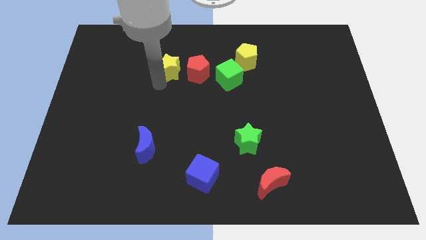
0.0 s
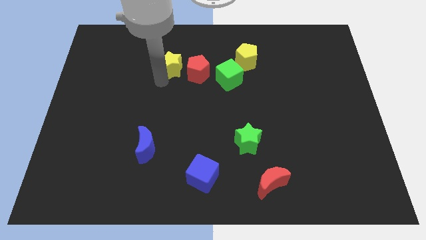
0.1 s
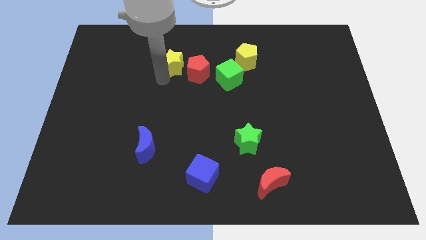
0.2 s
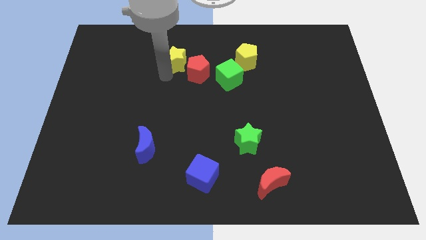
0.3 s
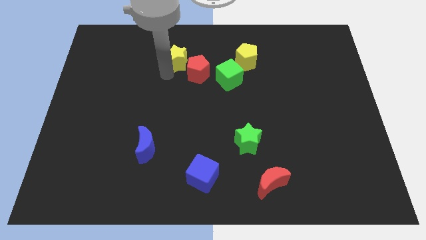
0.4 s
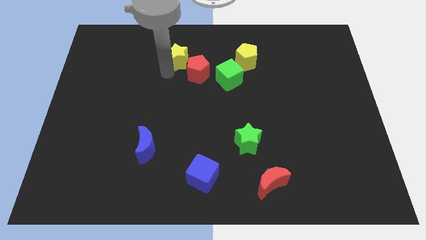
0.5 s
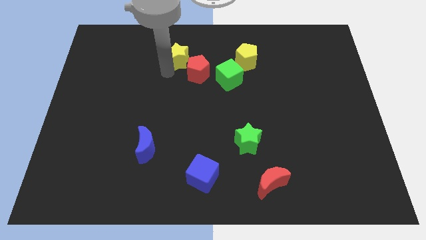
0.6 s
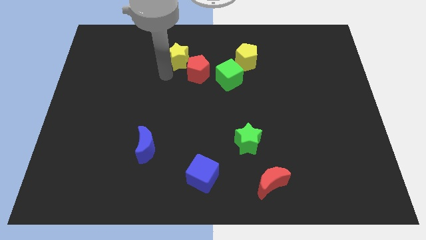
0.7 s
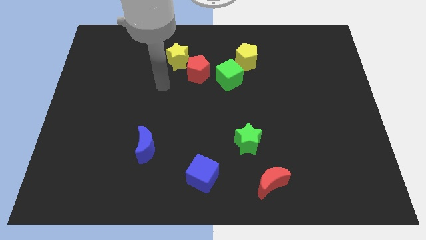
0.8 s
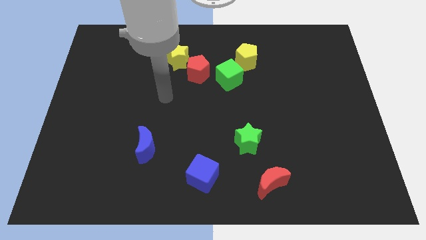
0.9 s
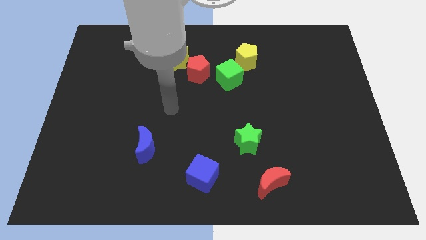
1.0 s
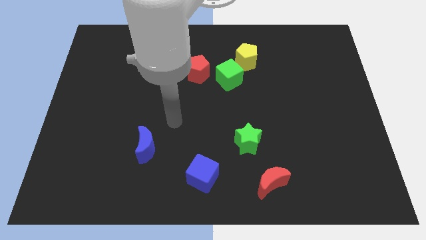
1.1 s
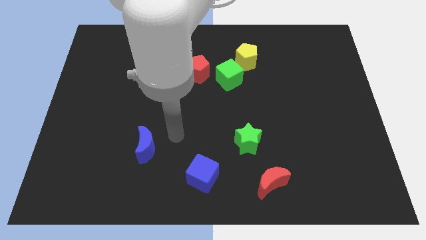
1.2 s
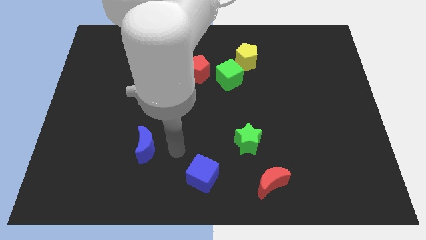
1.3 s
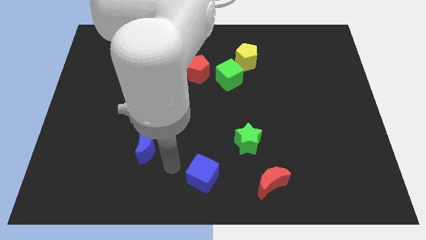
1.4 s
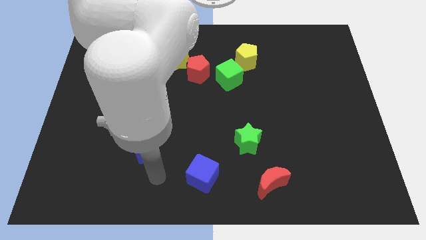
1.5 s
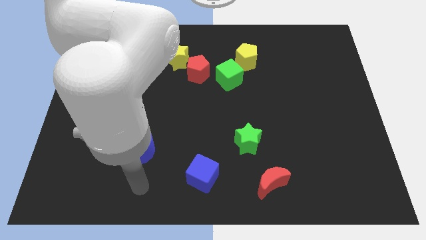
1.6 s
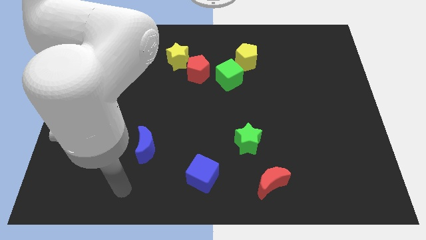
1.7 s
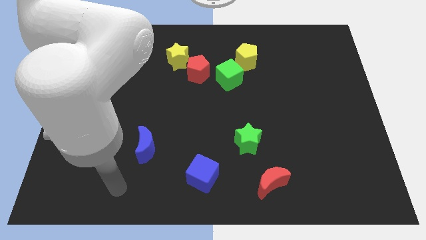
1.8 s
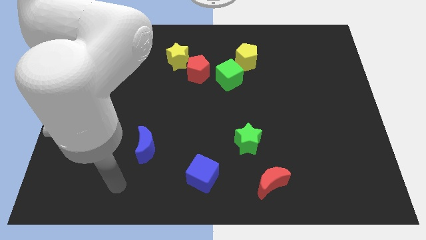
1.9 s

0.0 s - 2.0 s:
move your arm towards the blue moon

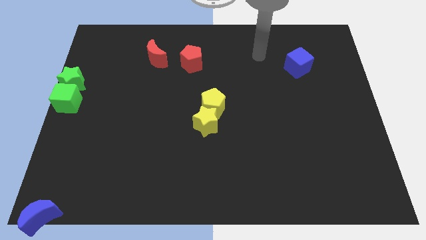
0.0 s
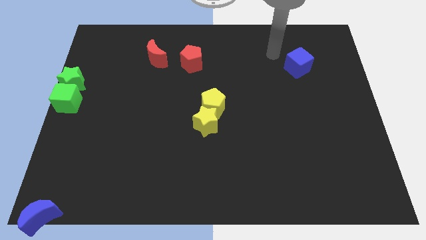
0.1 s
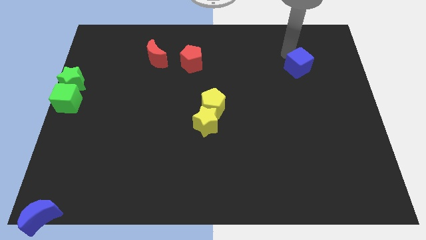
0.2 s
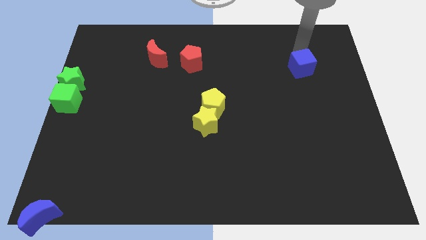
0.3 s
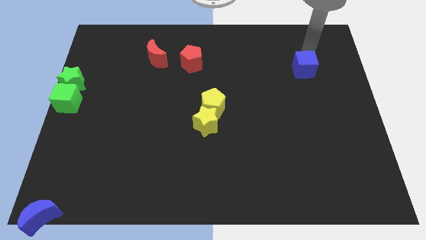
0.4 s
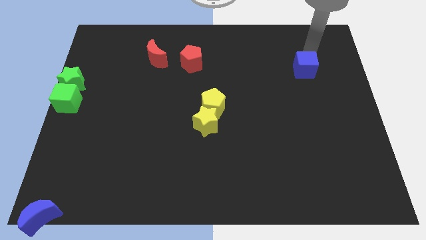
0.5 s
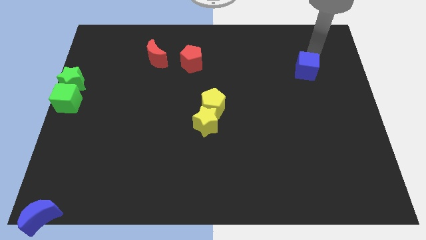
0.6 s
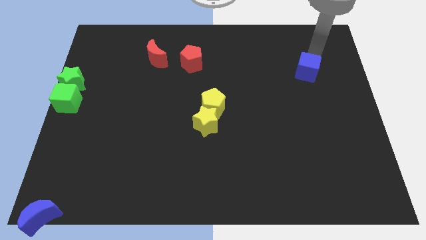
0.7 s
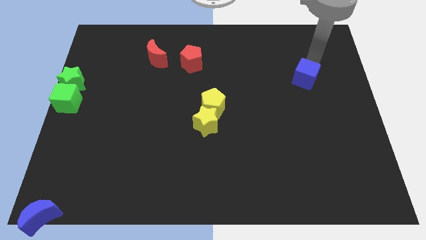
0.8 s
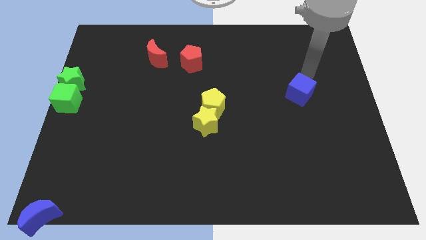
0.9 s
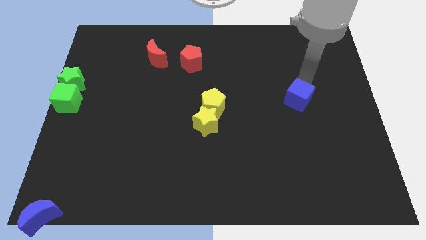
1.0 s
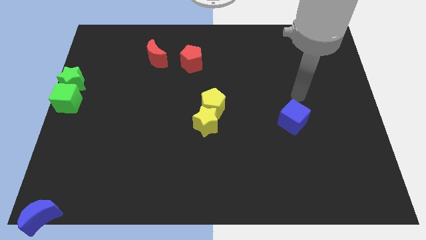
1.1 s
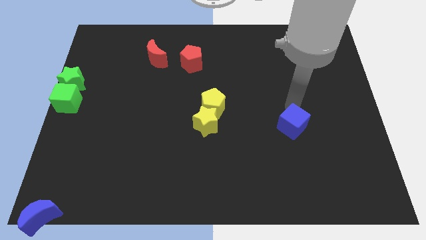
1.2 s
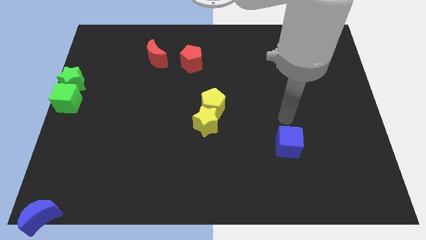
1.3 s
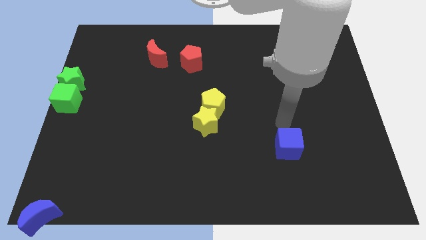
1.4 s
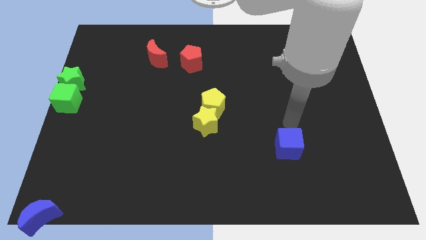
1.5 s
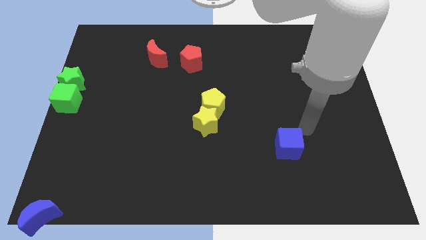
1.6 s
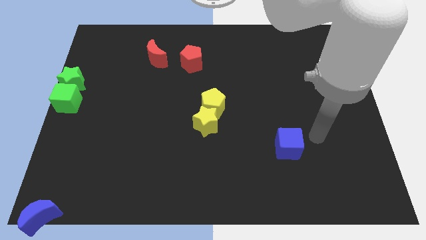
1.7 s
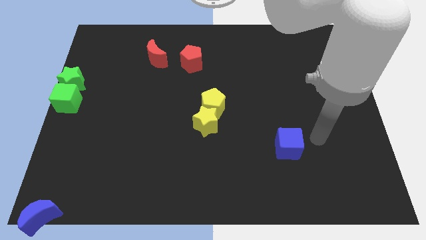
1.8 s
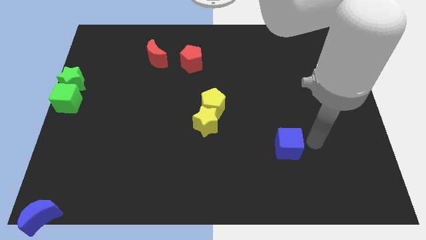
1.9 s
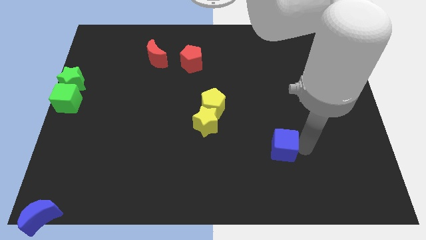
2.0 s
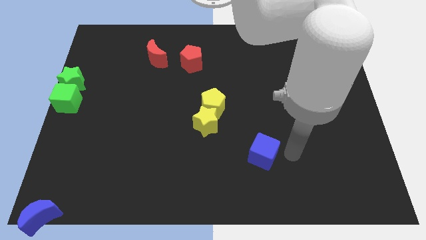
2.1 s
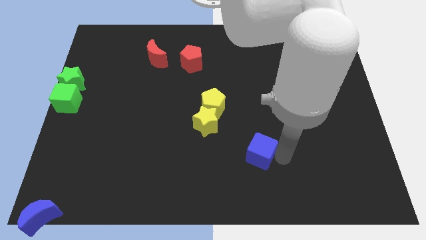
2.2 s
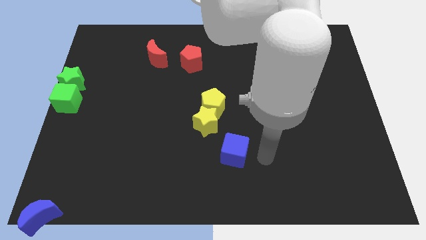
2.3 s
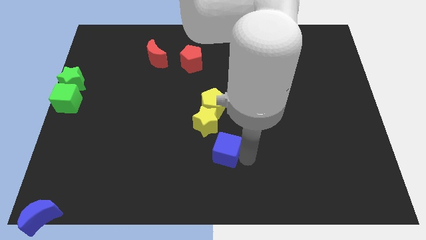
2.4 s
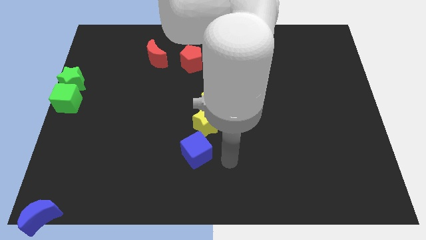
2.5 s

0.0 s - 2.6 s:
slide blue cube to the bottom side of the yellow star

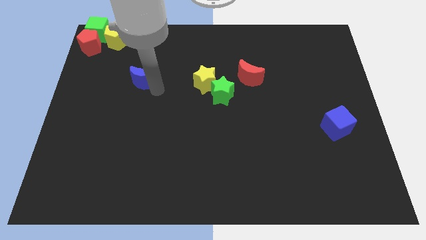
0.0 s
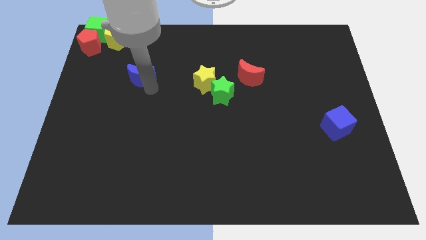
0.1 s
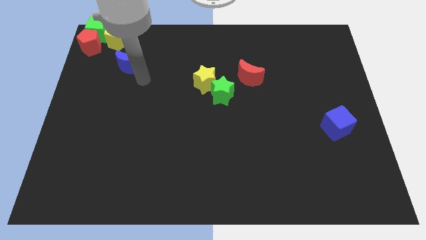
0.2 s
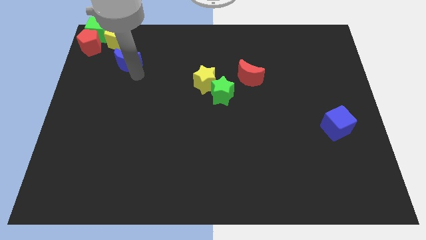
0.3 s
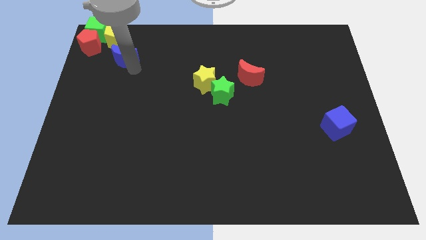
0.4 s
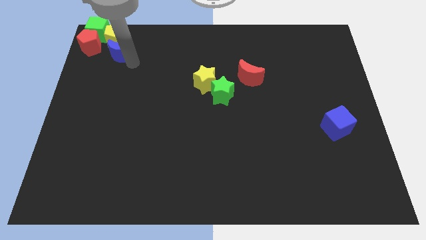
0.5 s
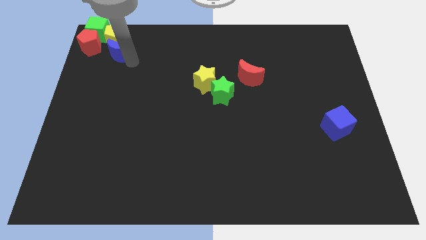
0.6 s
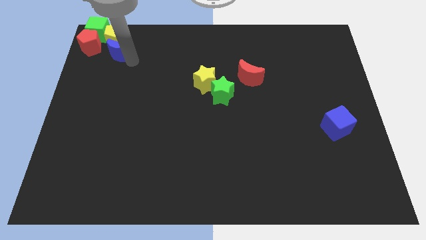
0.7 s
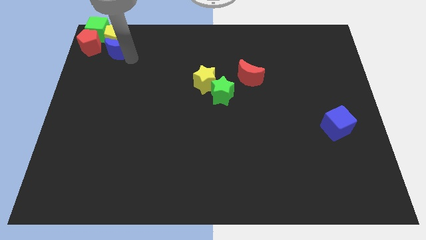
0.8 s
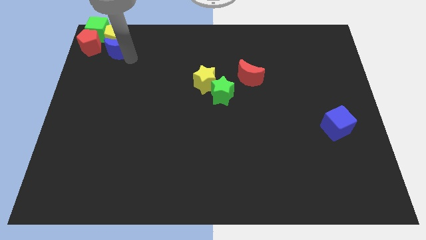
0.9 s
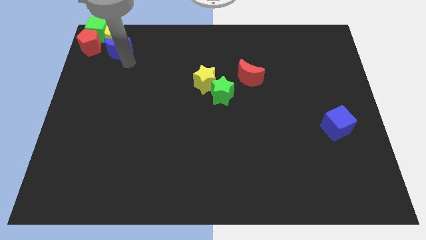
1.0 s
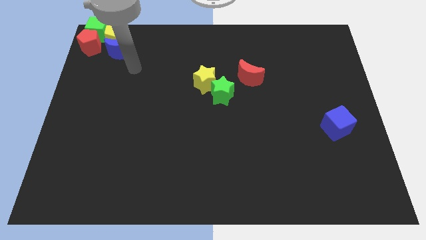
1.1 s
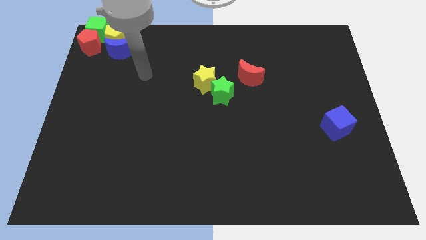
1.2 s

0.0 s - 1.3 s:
move the blue crescent to the bottom of the yellow star

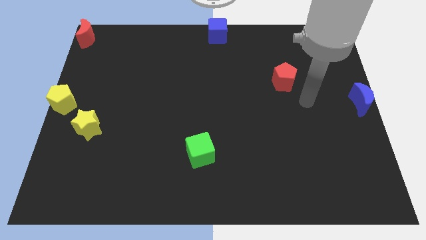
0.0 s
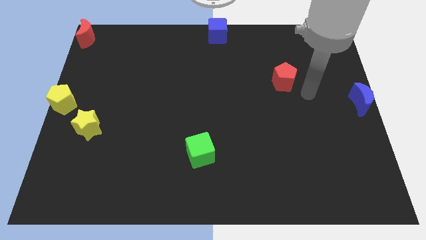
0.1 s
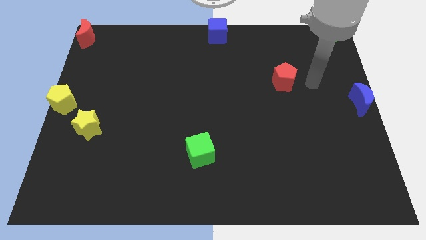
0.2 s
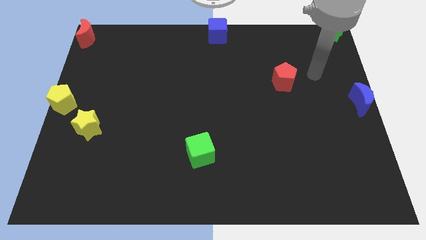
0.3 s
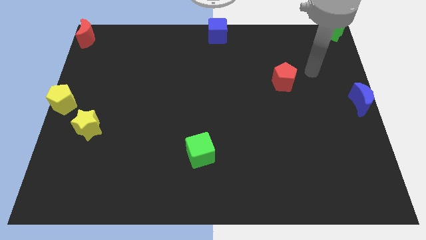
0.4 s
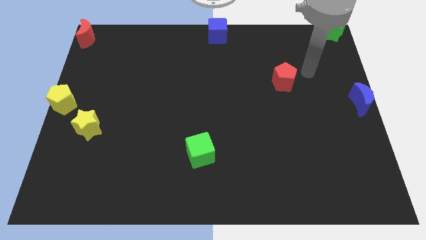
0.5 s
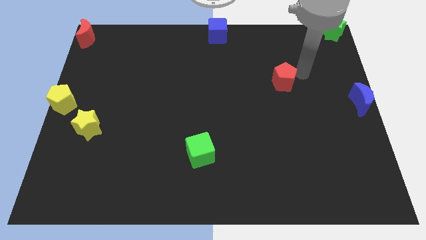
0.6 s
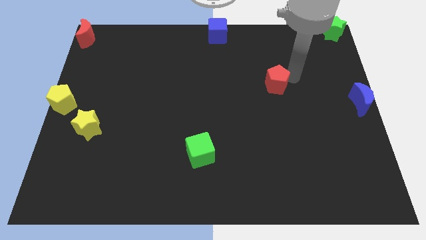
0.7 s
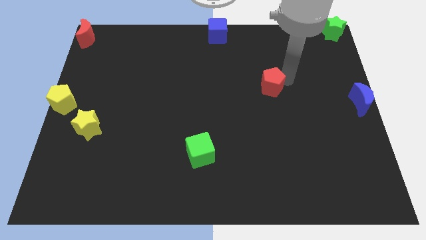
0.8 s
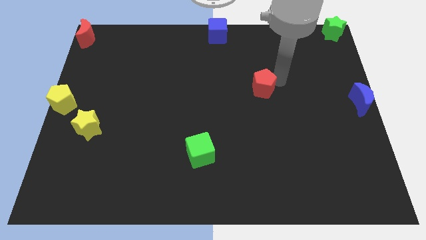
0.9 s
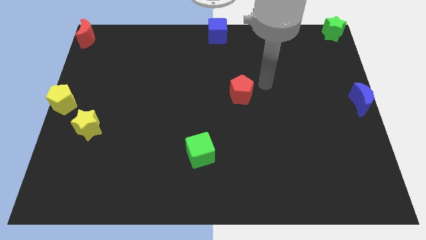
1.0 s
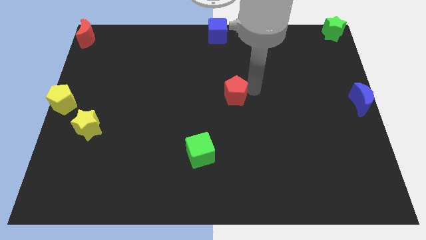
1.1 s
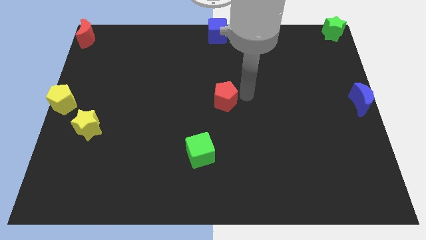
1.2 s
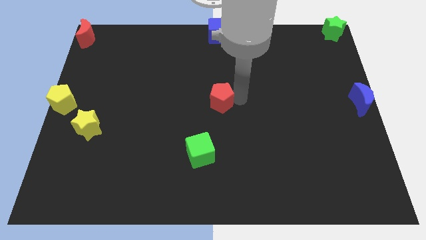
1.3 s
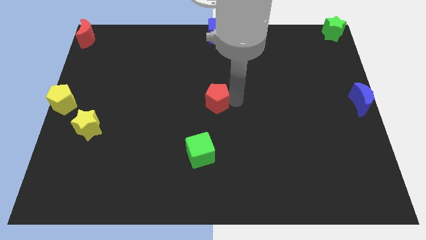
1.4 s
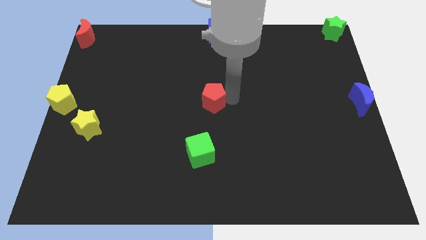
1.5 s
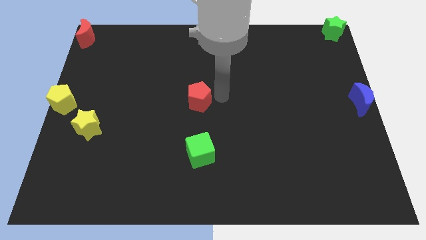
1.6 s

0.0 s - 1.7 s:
move the red pentagon to the center of the board

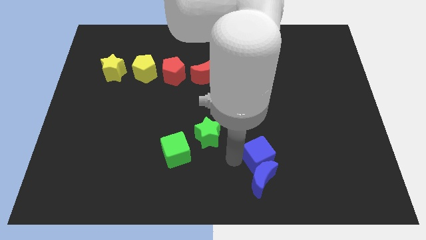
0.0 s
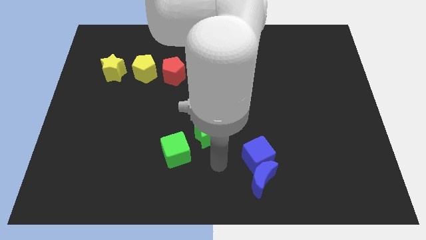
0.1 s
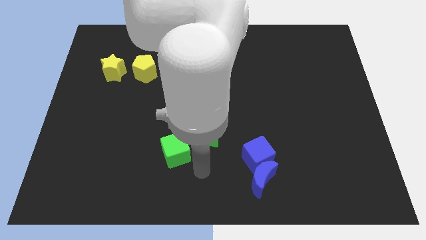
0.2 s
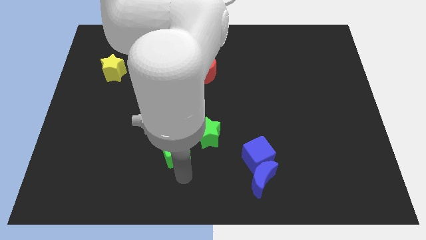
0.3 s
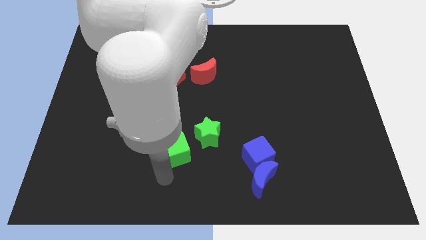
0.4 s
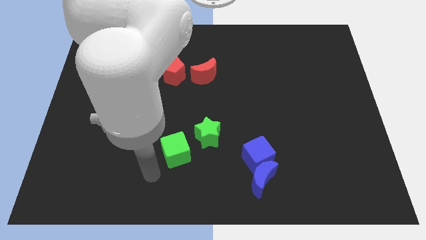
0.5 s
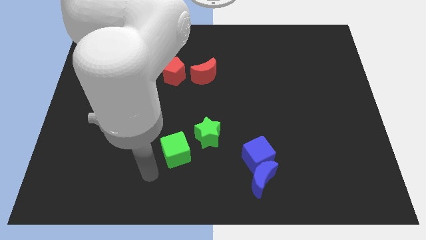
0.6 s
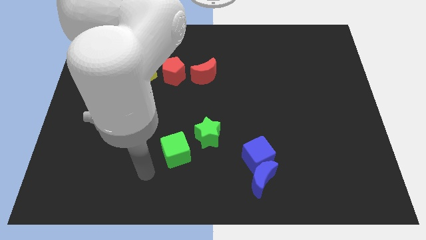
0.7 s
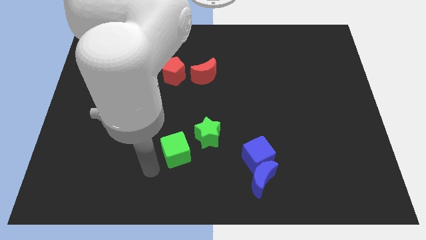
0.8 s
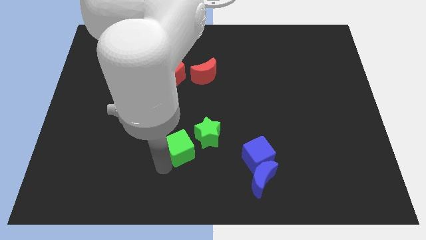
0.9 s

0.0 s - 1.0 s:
move your arm away from the blue cube

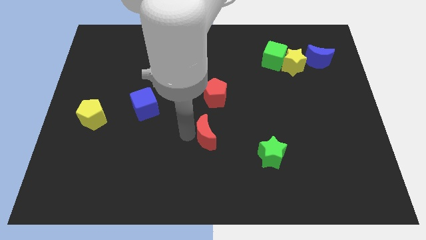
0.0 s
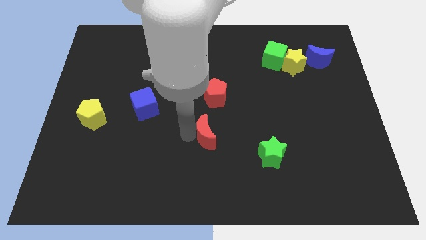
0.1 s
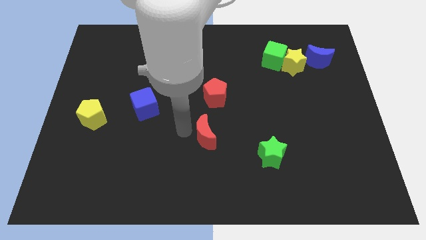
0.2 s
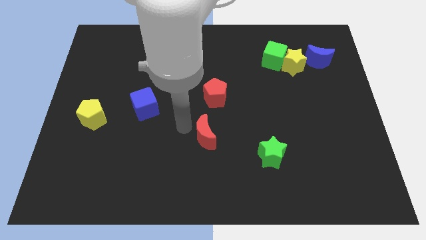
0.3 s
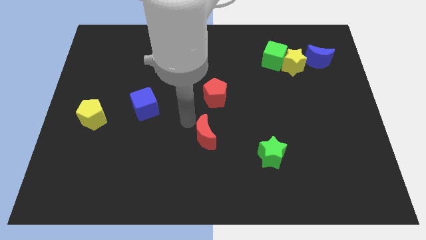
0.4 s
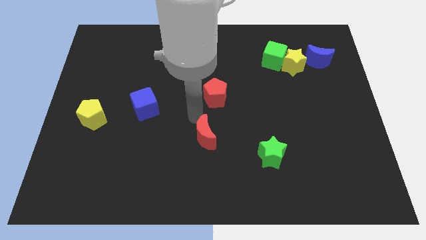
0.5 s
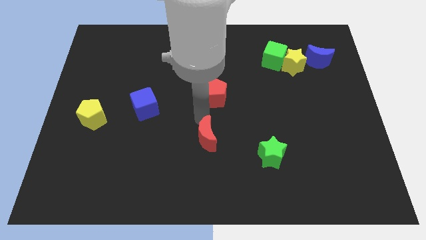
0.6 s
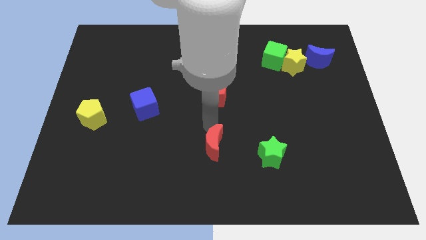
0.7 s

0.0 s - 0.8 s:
move red moon below red pentagon
